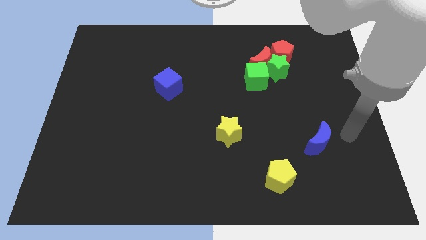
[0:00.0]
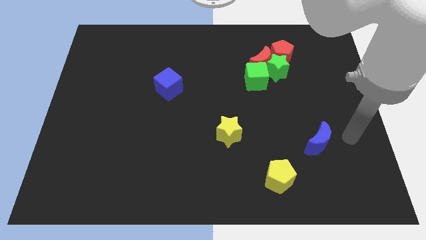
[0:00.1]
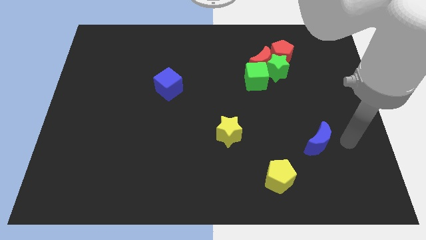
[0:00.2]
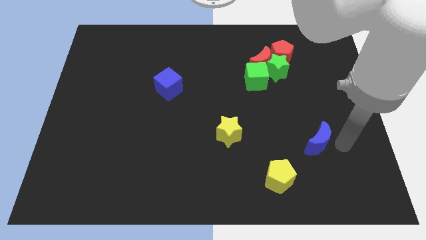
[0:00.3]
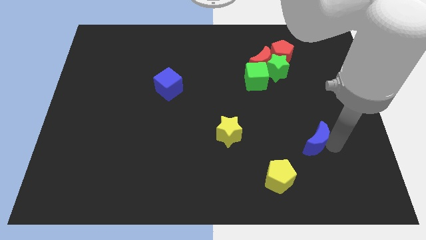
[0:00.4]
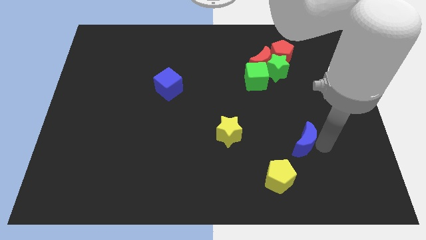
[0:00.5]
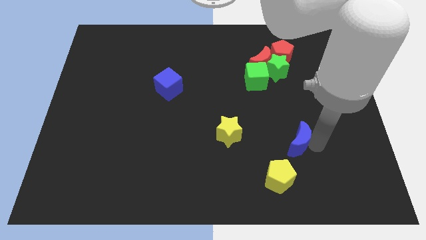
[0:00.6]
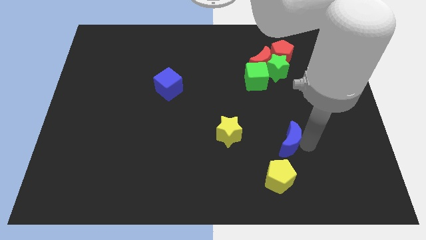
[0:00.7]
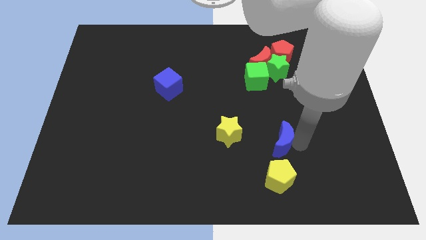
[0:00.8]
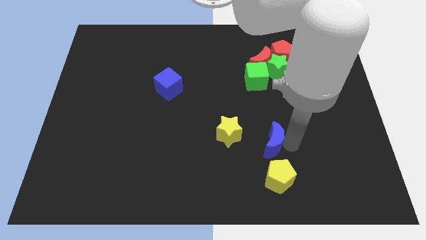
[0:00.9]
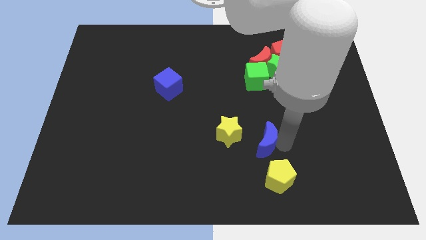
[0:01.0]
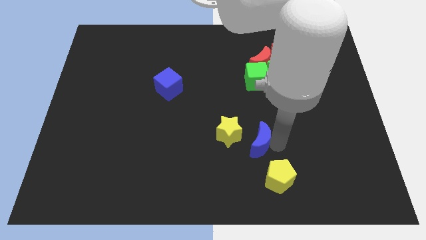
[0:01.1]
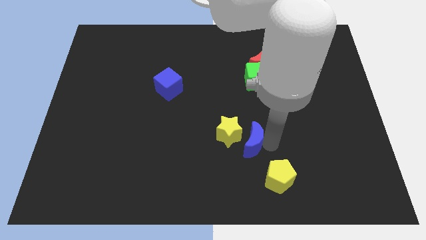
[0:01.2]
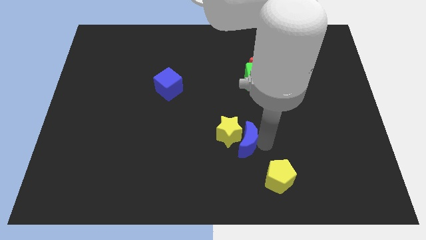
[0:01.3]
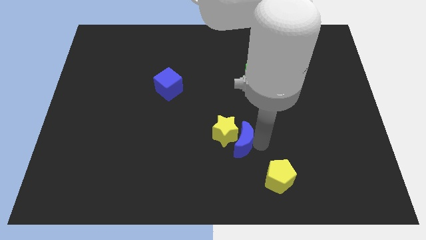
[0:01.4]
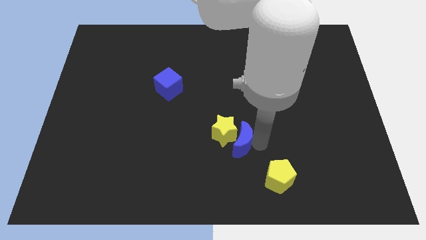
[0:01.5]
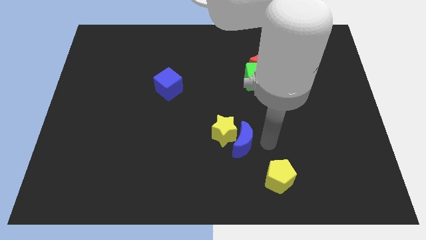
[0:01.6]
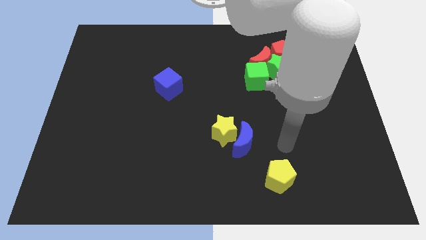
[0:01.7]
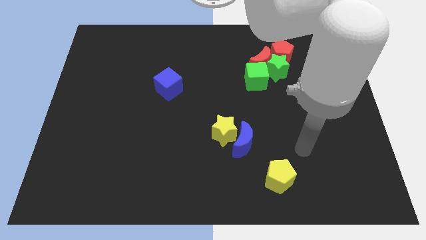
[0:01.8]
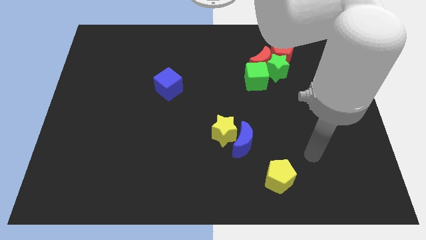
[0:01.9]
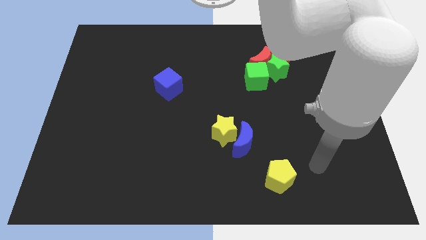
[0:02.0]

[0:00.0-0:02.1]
push the blue moon into the yellow star

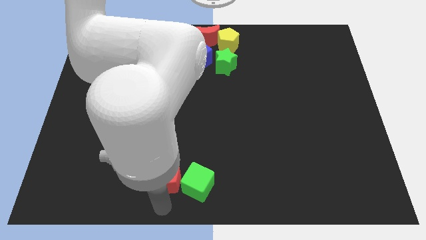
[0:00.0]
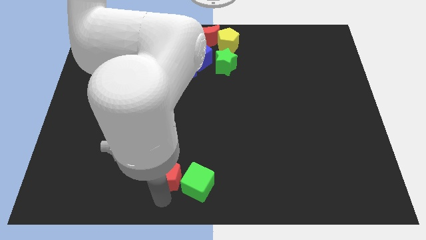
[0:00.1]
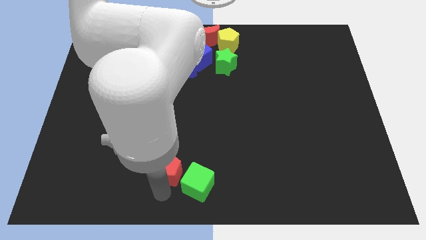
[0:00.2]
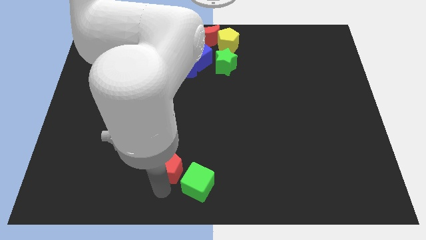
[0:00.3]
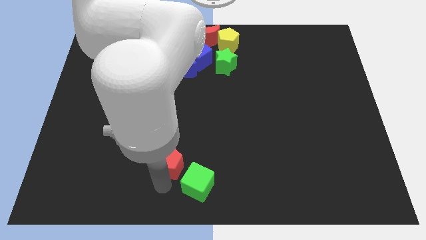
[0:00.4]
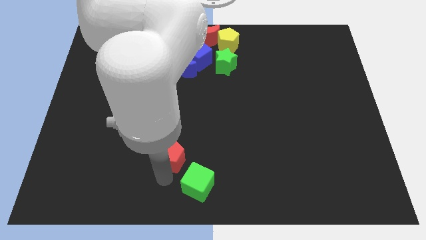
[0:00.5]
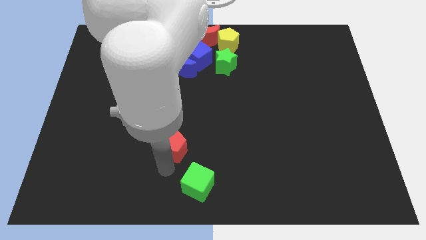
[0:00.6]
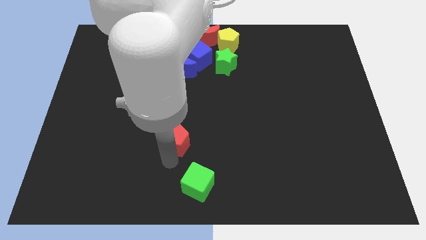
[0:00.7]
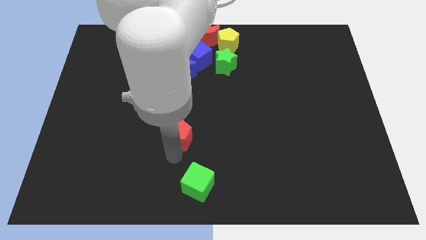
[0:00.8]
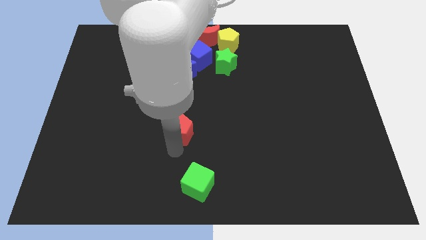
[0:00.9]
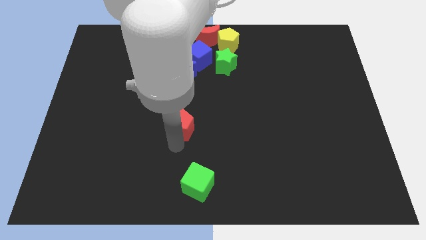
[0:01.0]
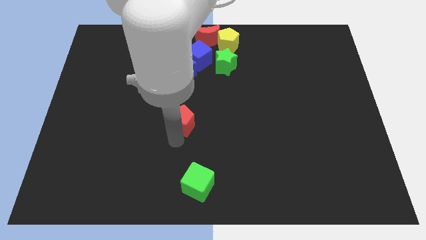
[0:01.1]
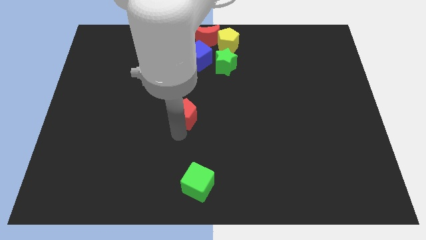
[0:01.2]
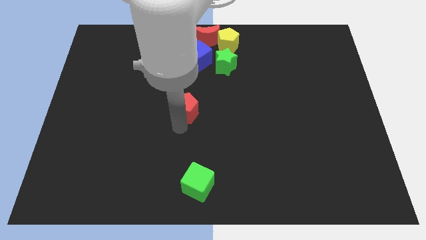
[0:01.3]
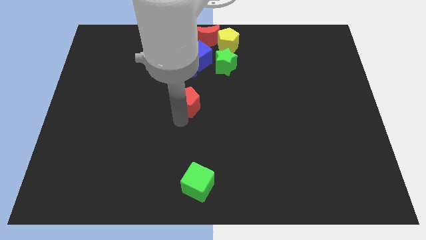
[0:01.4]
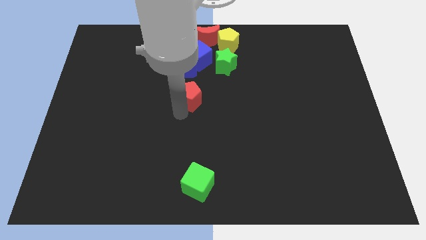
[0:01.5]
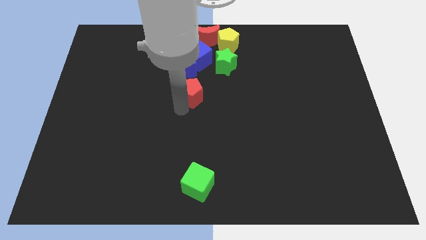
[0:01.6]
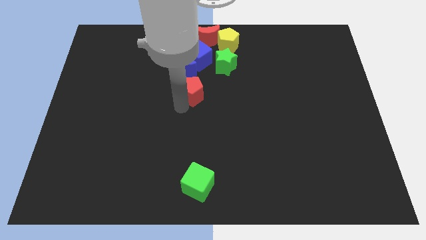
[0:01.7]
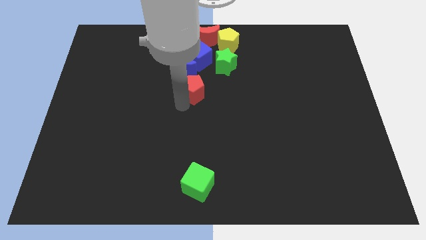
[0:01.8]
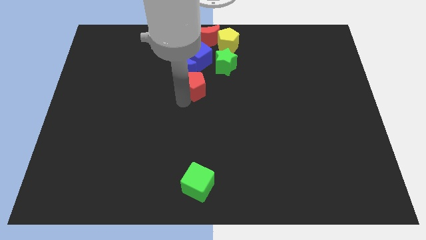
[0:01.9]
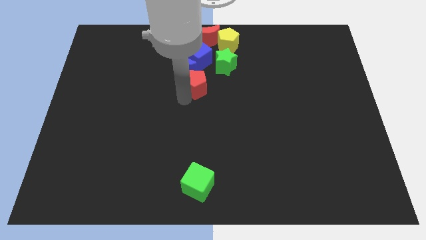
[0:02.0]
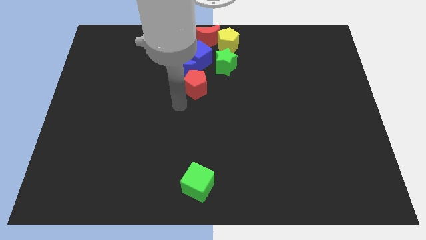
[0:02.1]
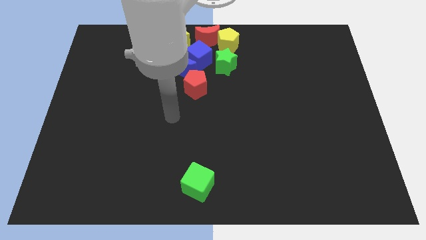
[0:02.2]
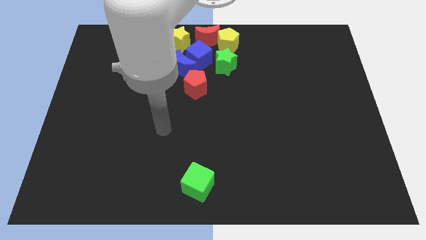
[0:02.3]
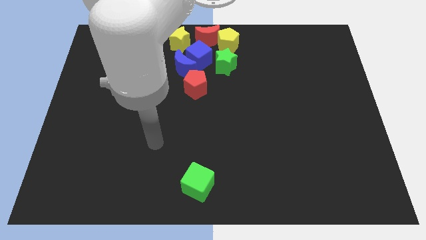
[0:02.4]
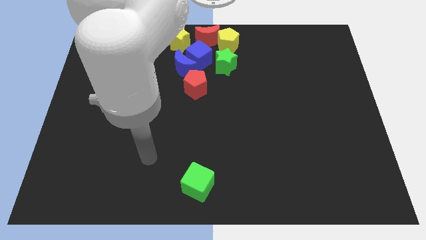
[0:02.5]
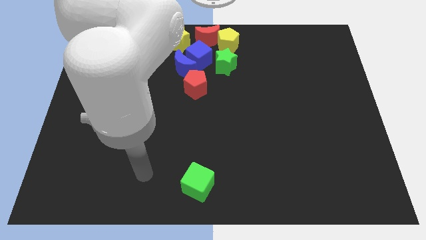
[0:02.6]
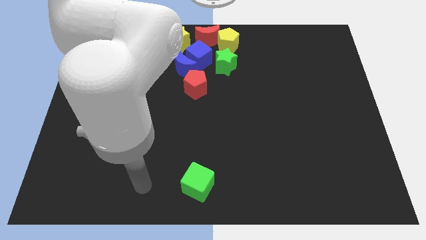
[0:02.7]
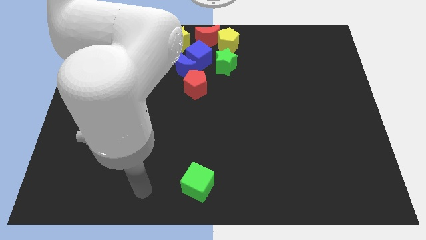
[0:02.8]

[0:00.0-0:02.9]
place red pentagon at the bottom of blue crescent

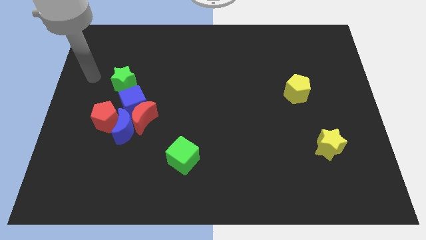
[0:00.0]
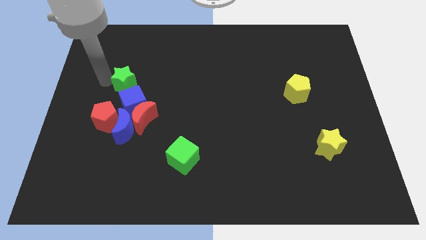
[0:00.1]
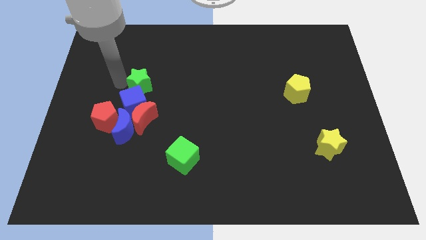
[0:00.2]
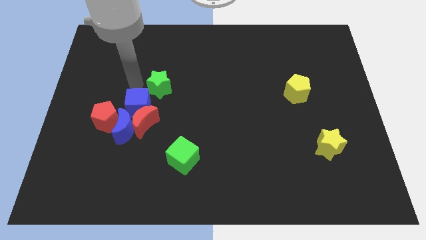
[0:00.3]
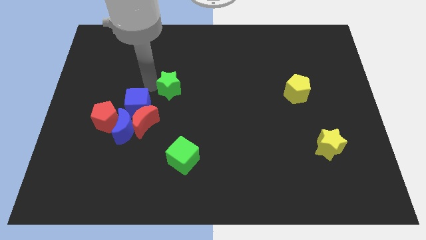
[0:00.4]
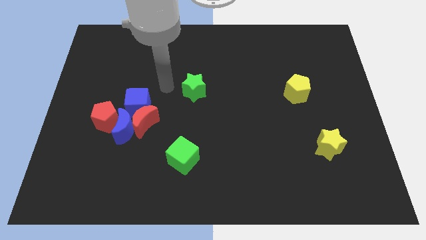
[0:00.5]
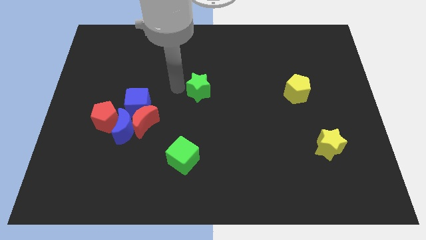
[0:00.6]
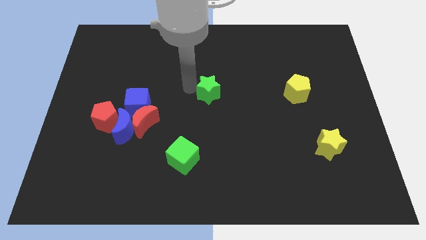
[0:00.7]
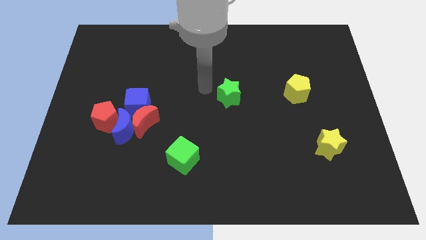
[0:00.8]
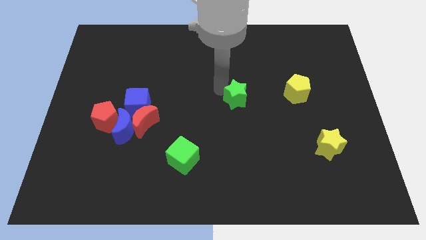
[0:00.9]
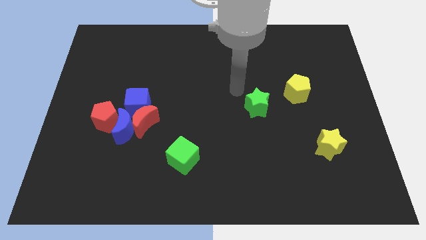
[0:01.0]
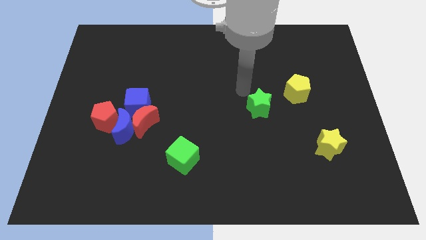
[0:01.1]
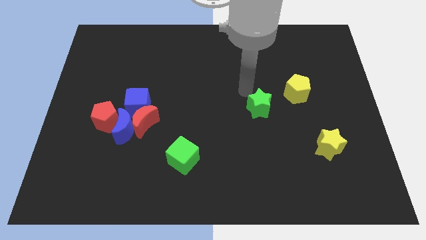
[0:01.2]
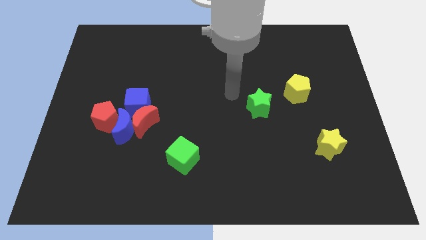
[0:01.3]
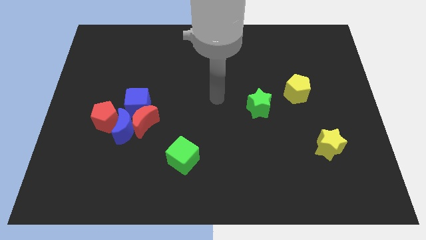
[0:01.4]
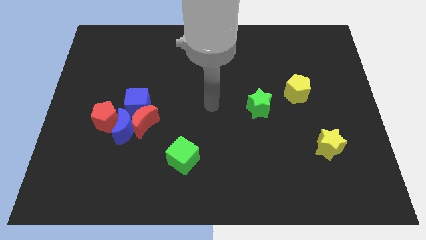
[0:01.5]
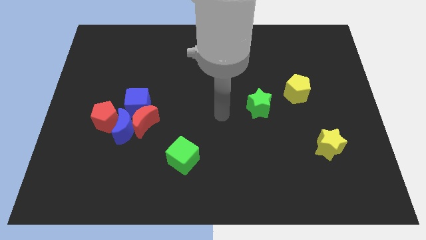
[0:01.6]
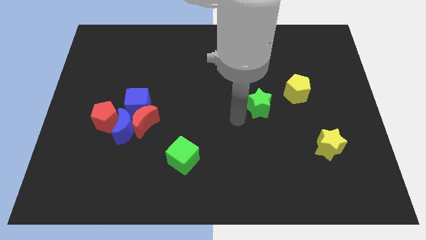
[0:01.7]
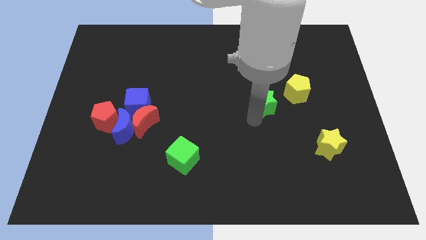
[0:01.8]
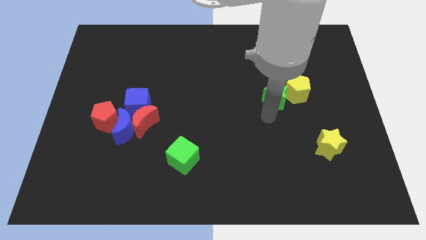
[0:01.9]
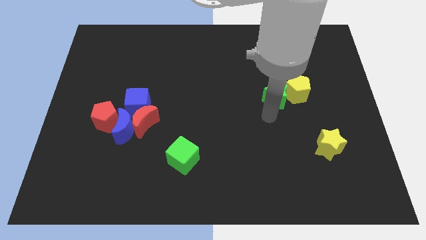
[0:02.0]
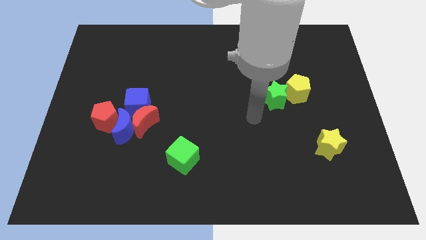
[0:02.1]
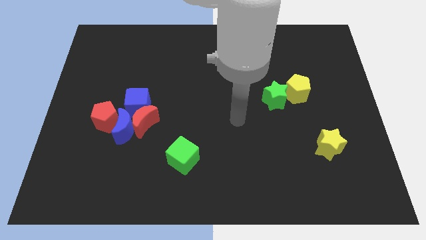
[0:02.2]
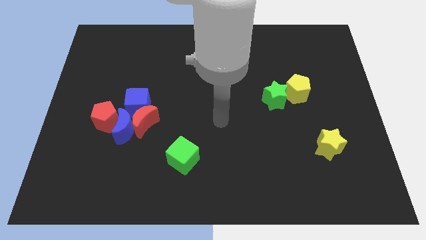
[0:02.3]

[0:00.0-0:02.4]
place the green star above the yellow star

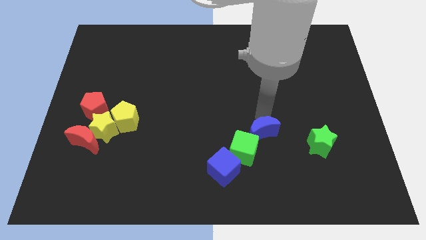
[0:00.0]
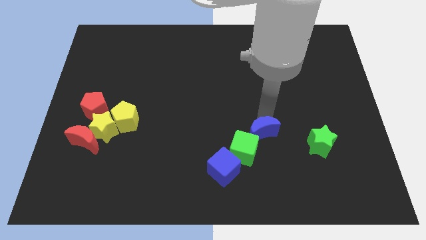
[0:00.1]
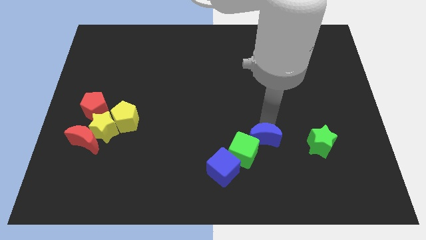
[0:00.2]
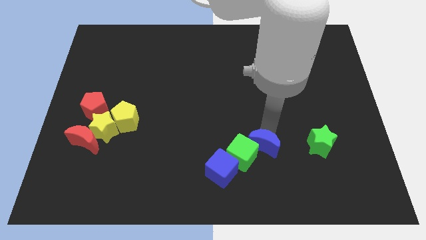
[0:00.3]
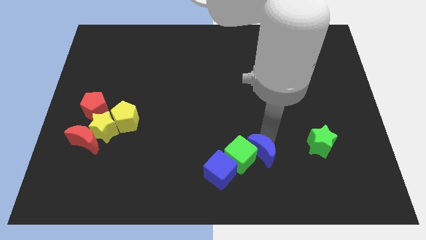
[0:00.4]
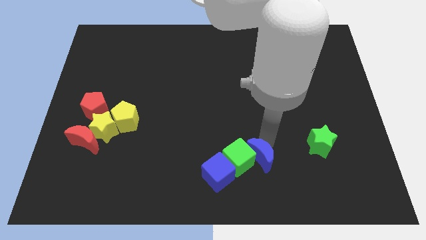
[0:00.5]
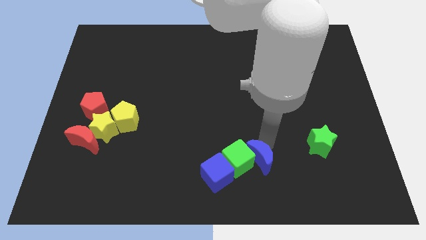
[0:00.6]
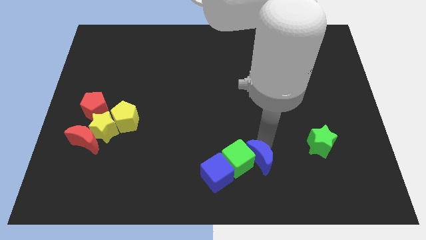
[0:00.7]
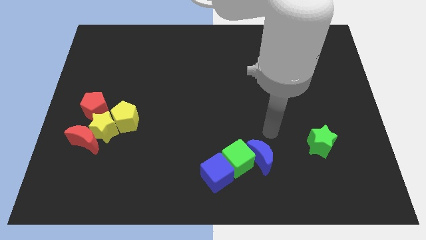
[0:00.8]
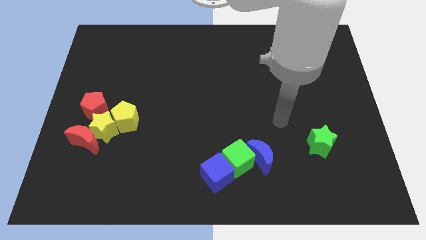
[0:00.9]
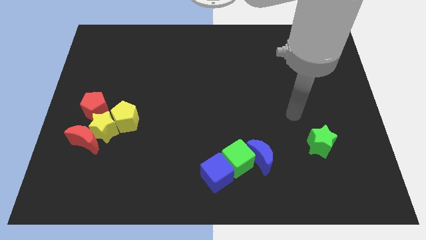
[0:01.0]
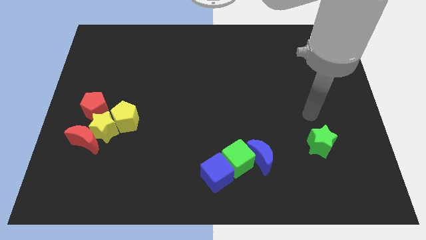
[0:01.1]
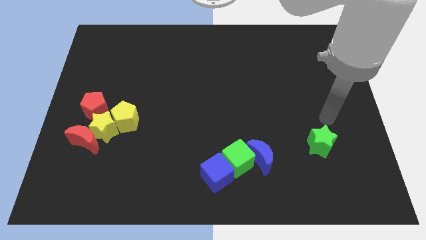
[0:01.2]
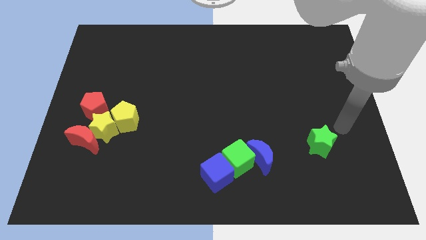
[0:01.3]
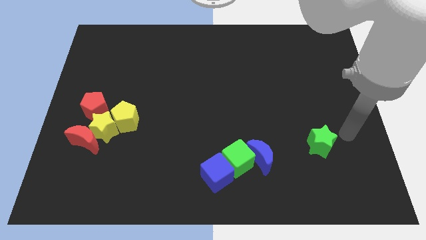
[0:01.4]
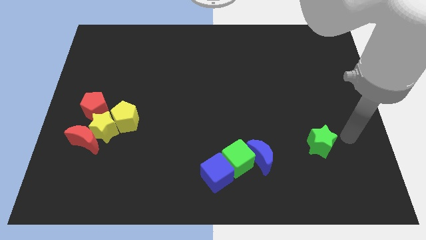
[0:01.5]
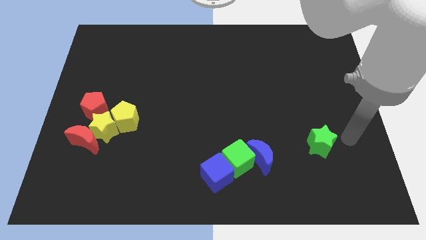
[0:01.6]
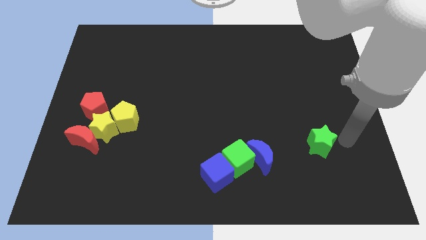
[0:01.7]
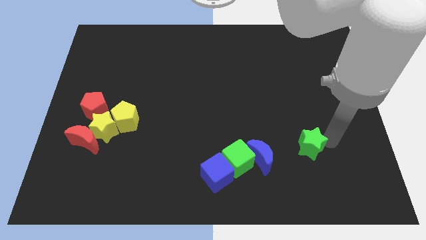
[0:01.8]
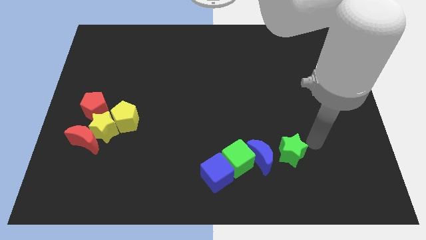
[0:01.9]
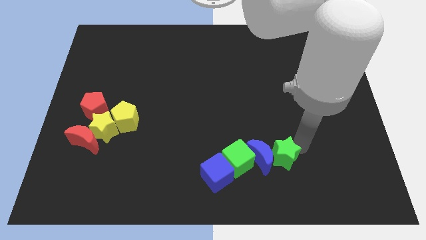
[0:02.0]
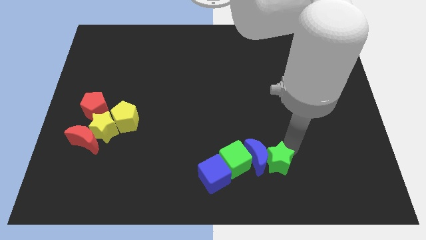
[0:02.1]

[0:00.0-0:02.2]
place the green star towards the right side of the blue crescent
